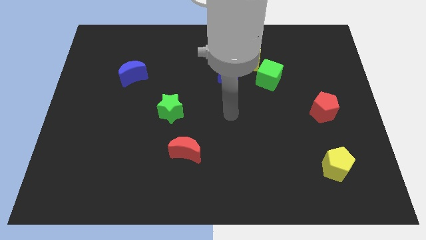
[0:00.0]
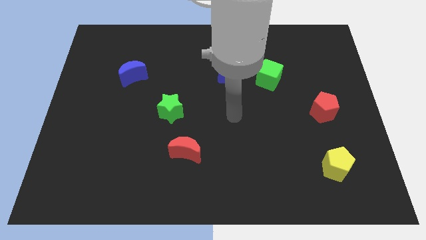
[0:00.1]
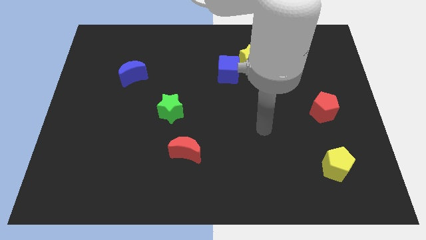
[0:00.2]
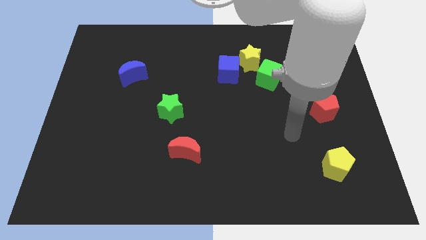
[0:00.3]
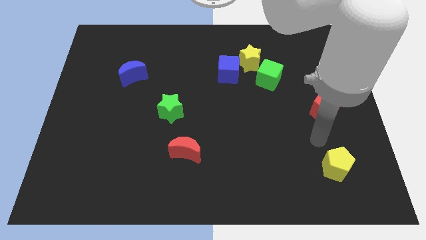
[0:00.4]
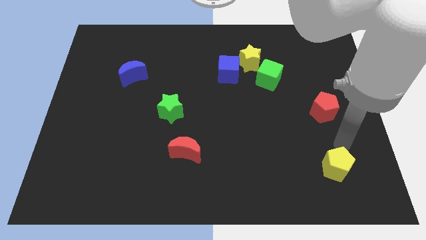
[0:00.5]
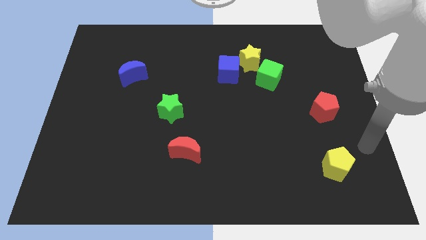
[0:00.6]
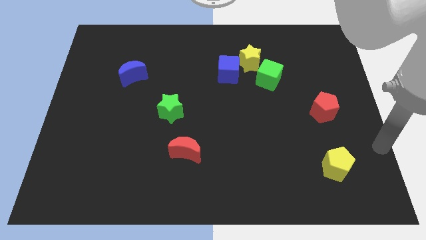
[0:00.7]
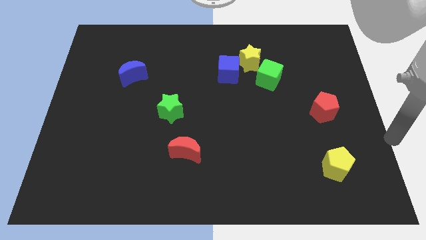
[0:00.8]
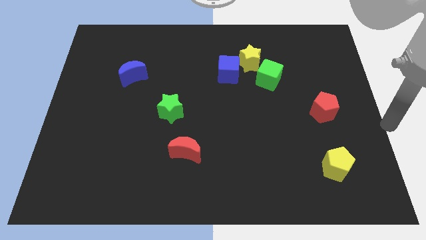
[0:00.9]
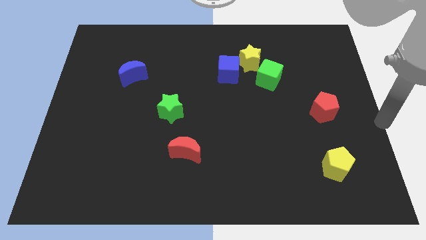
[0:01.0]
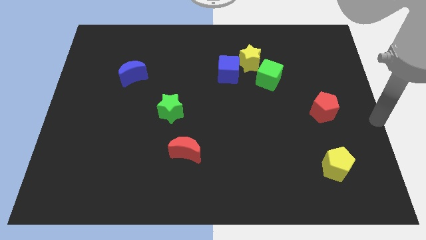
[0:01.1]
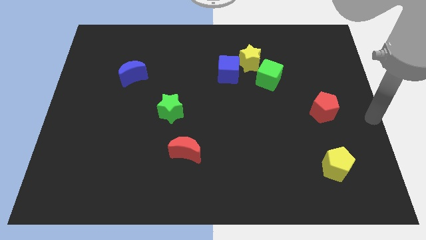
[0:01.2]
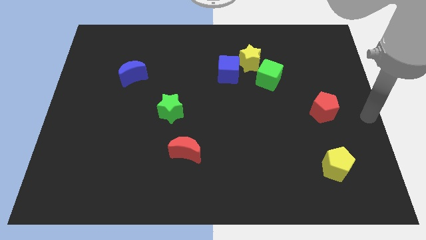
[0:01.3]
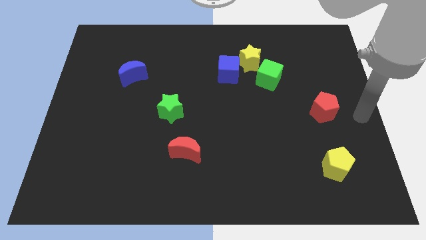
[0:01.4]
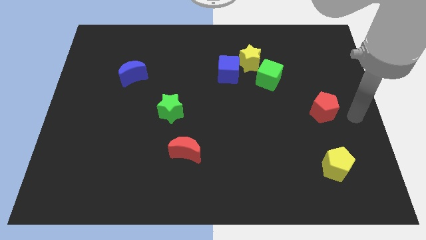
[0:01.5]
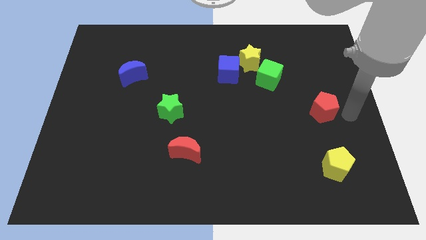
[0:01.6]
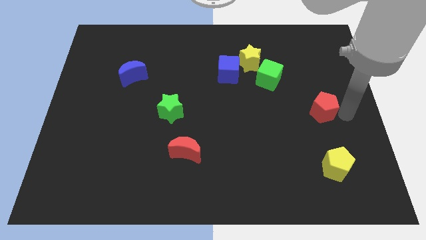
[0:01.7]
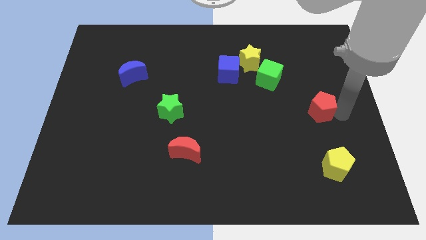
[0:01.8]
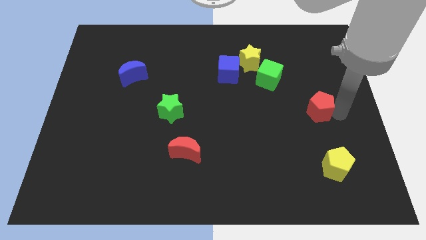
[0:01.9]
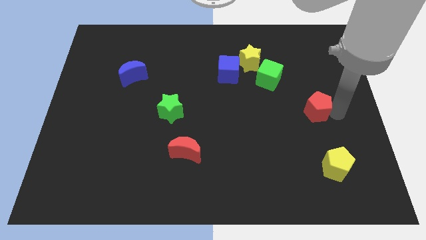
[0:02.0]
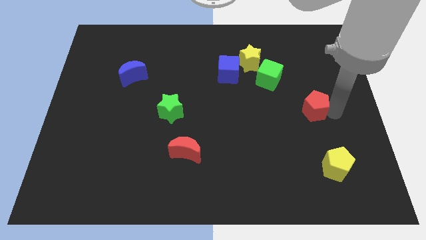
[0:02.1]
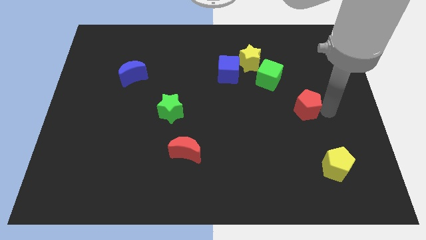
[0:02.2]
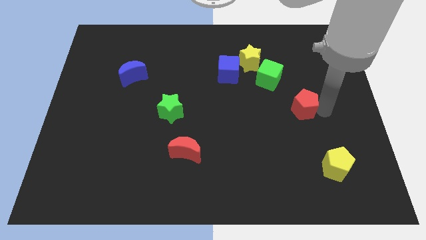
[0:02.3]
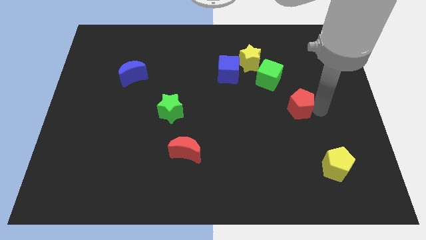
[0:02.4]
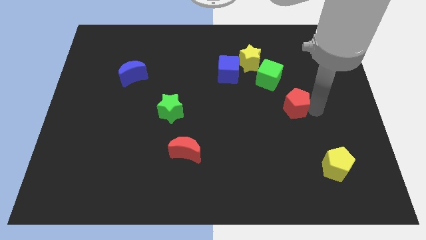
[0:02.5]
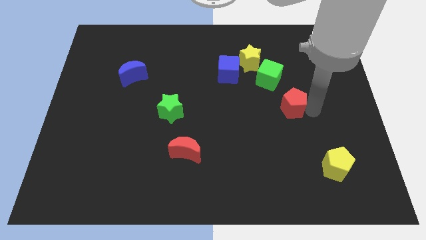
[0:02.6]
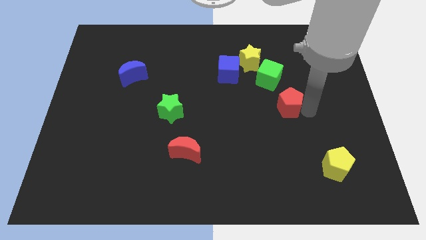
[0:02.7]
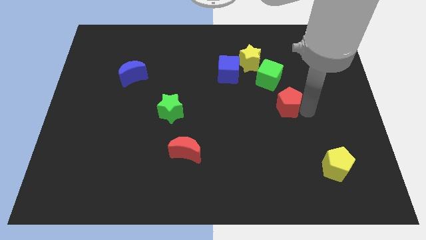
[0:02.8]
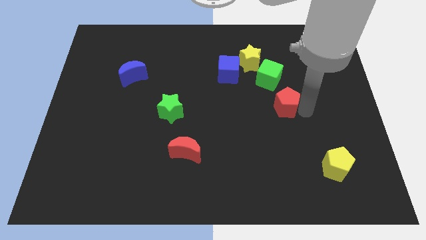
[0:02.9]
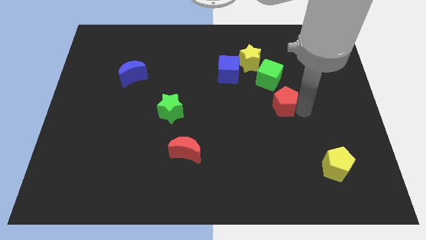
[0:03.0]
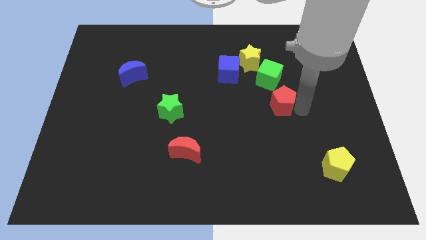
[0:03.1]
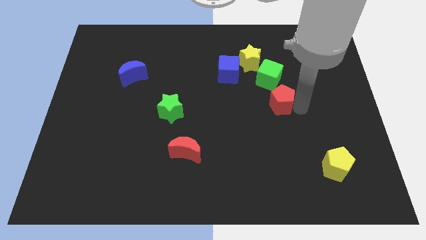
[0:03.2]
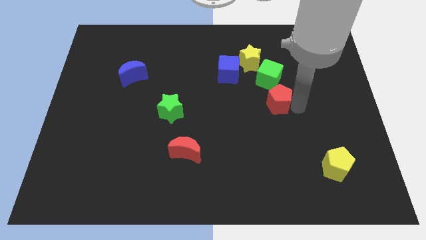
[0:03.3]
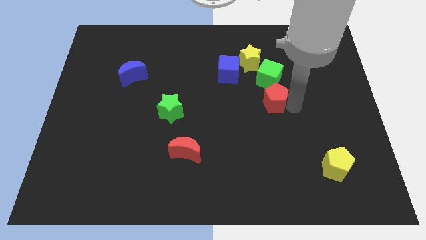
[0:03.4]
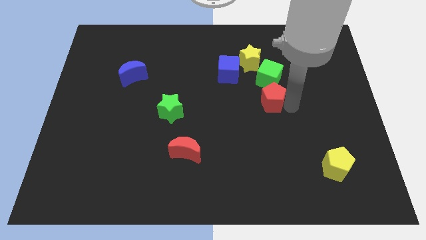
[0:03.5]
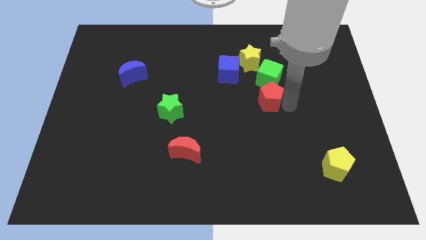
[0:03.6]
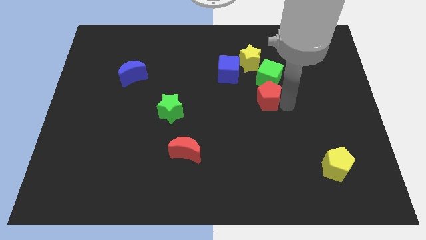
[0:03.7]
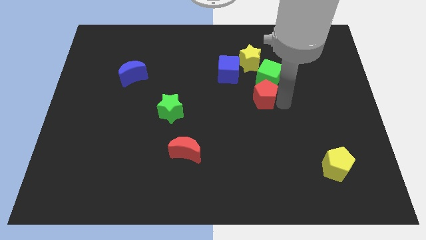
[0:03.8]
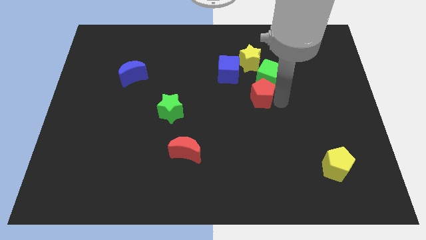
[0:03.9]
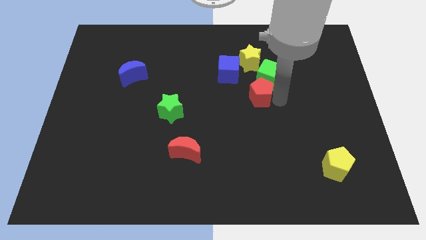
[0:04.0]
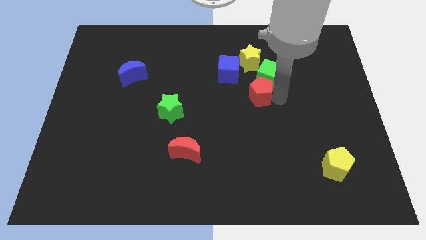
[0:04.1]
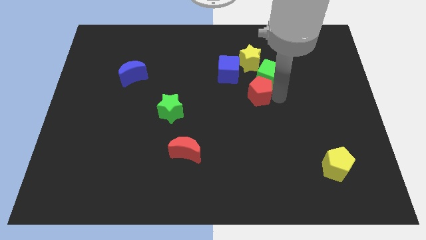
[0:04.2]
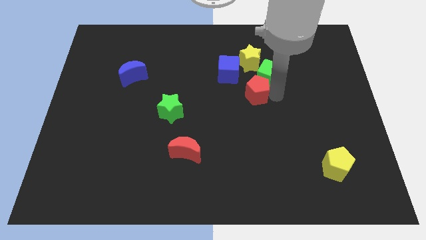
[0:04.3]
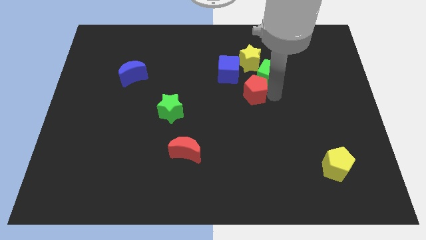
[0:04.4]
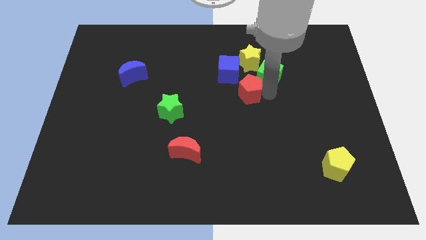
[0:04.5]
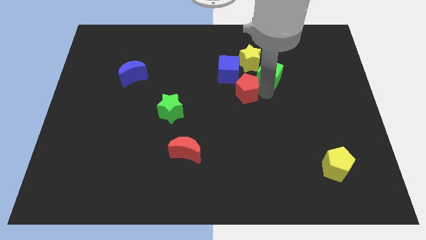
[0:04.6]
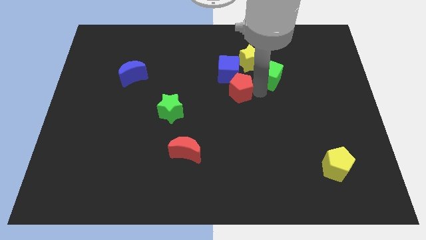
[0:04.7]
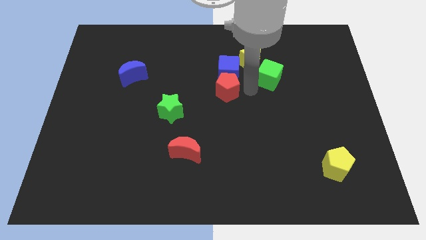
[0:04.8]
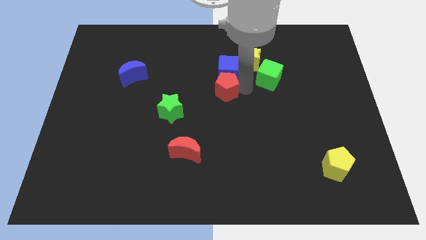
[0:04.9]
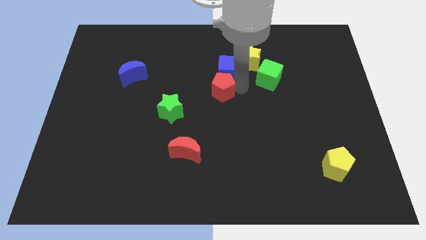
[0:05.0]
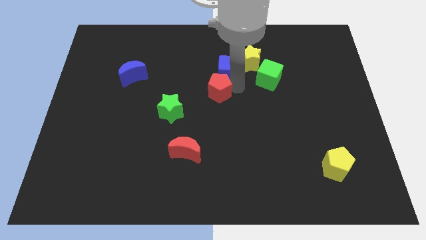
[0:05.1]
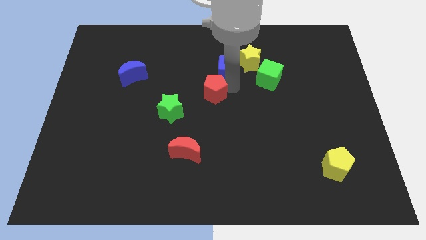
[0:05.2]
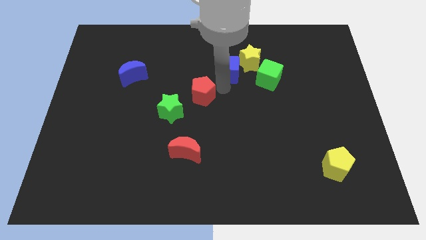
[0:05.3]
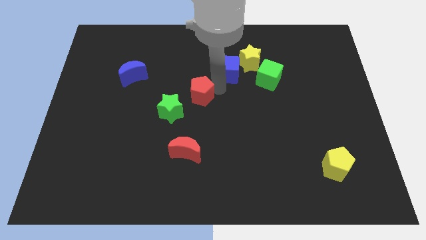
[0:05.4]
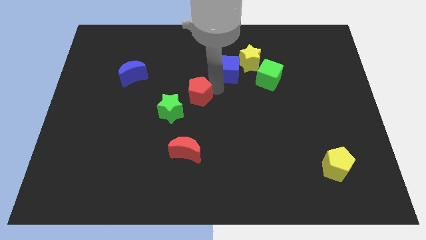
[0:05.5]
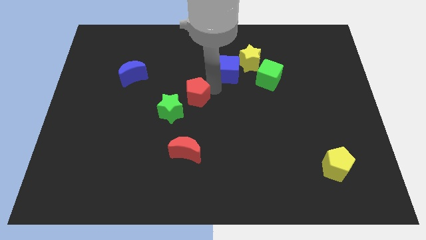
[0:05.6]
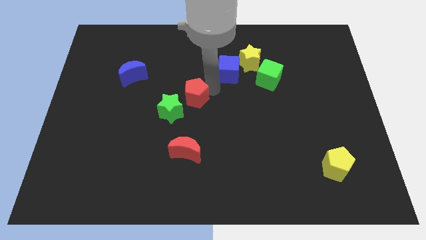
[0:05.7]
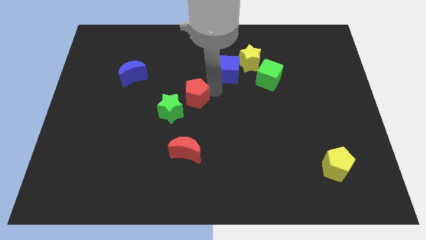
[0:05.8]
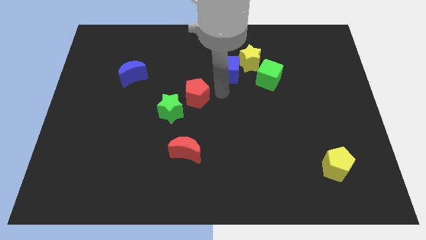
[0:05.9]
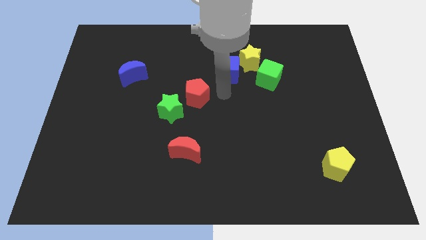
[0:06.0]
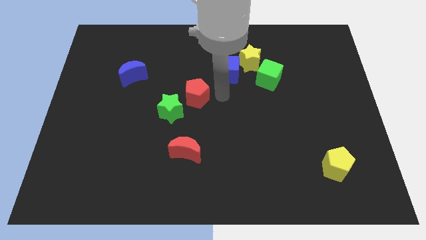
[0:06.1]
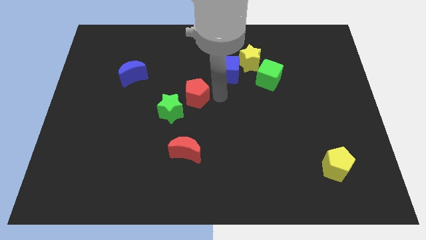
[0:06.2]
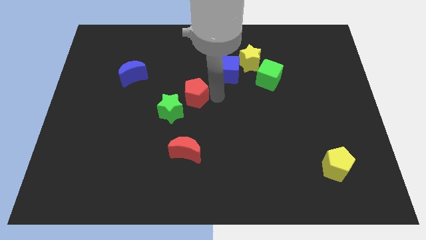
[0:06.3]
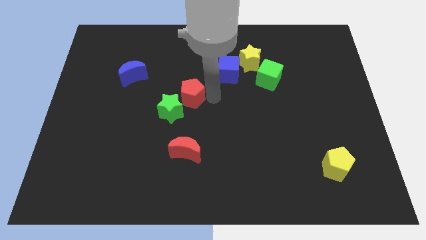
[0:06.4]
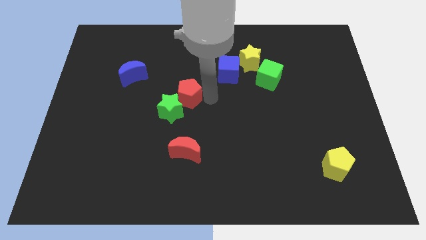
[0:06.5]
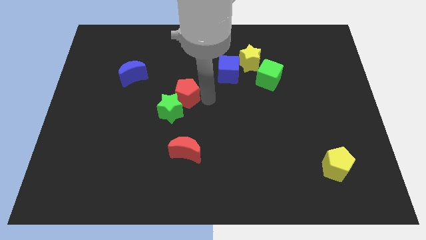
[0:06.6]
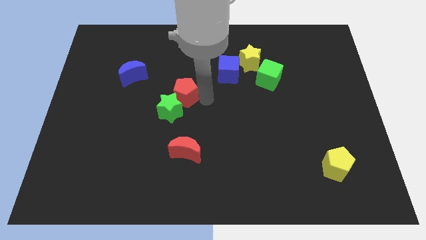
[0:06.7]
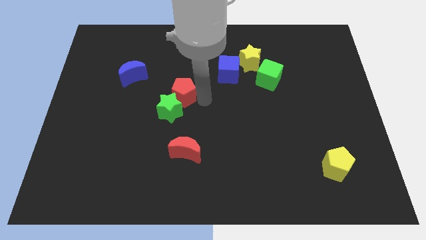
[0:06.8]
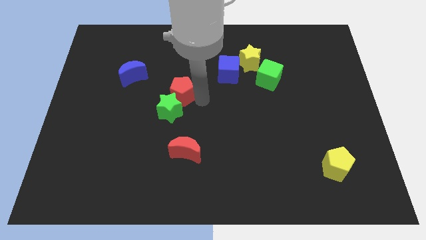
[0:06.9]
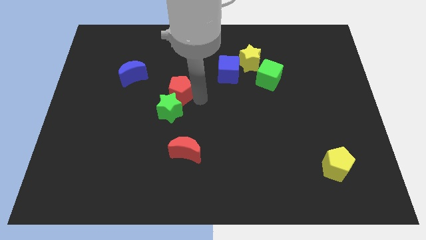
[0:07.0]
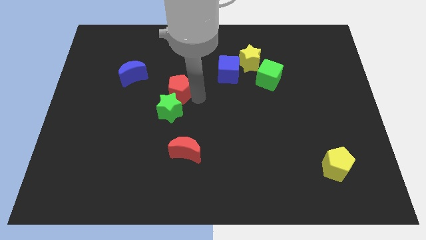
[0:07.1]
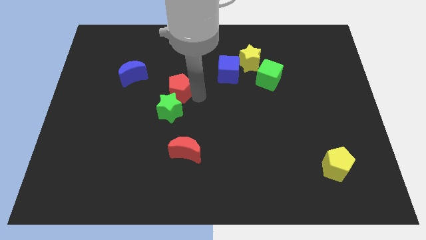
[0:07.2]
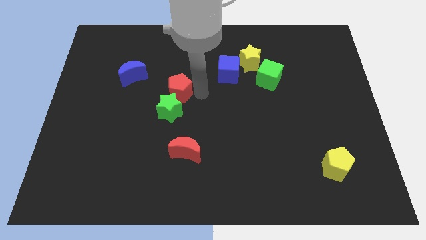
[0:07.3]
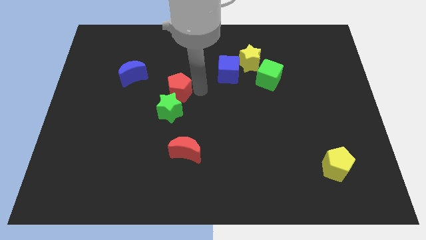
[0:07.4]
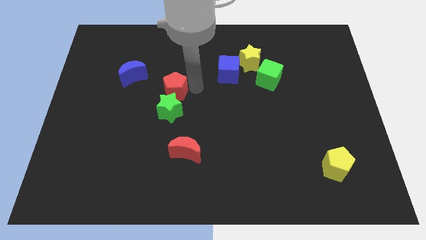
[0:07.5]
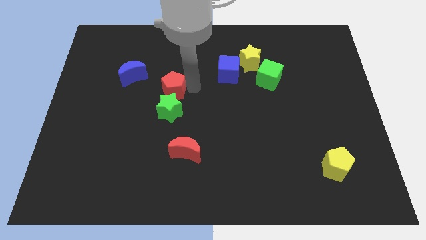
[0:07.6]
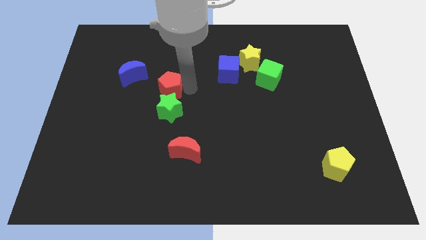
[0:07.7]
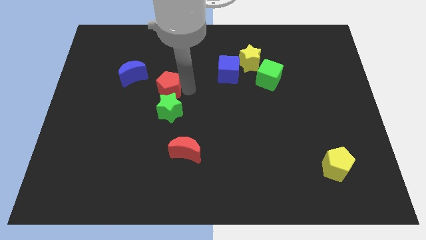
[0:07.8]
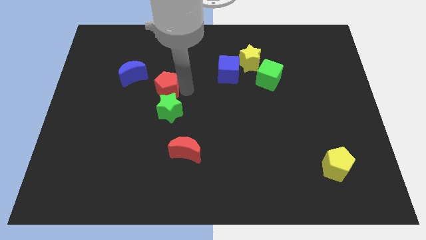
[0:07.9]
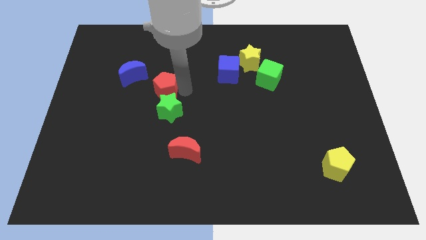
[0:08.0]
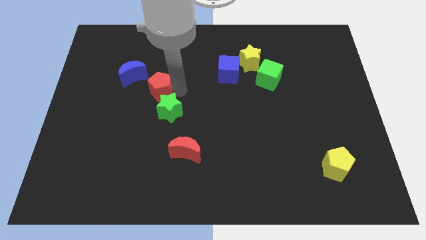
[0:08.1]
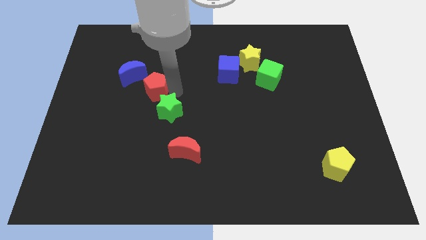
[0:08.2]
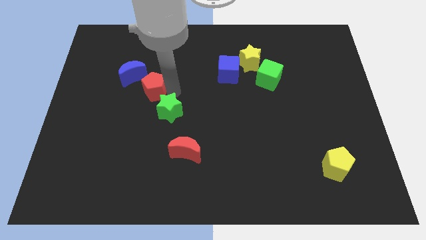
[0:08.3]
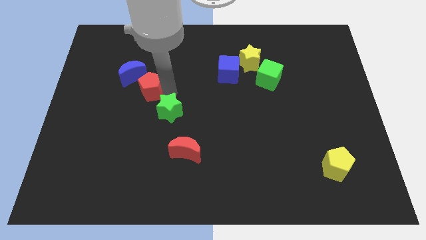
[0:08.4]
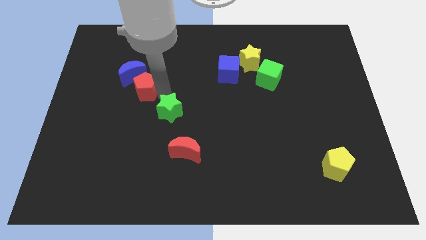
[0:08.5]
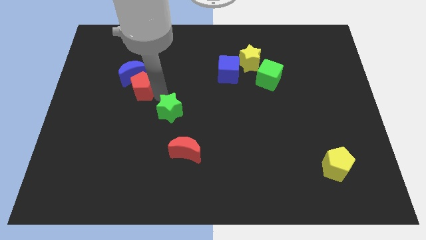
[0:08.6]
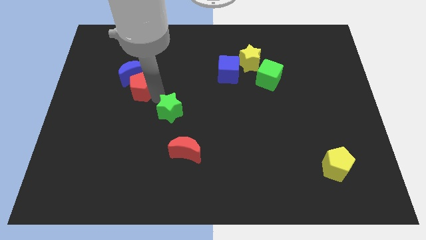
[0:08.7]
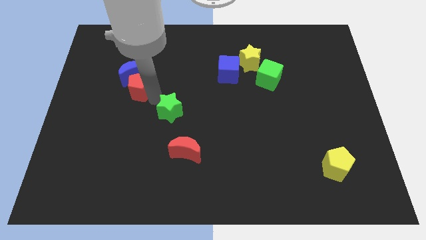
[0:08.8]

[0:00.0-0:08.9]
slide the red pentagon to the blue moon
